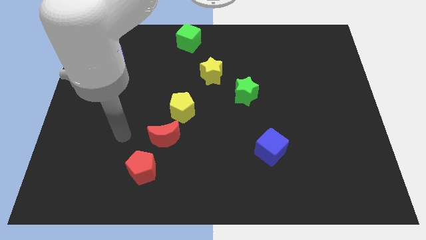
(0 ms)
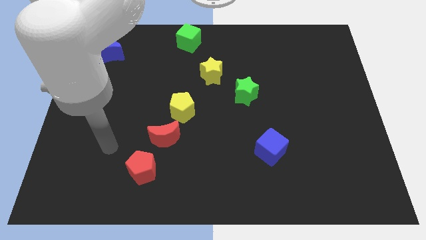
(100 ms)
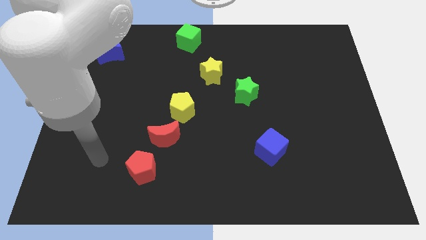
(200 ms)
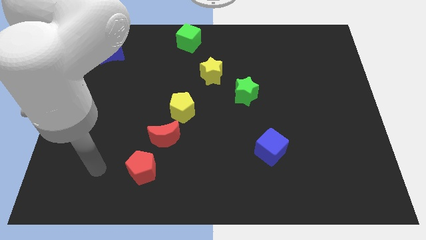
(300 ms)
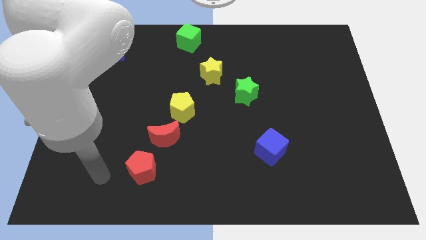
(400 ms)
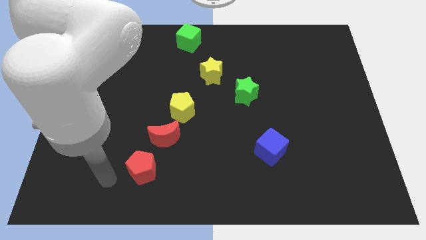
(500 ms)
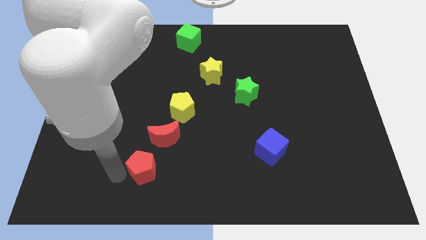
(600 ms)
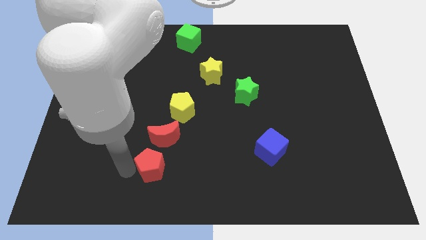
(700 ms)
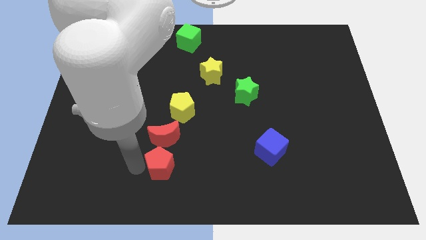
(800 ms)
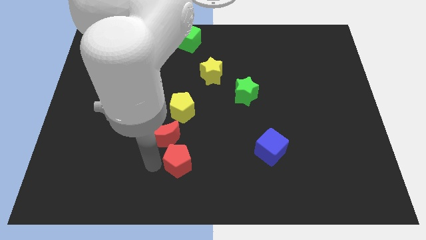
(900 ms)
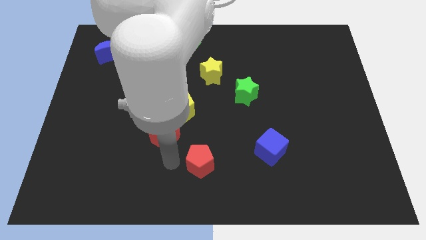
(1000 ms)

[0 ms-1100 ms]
move red pentagon to the right

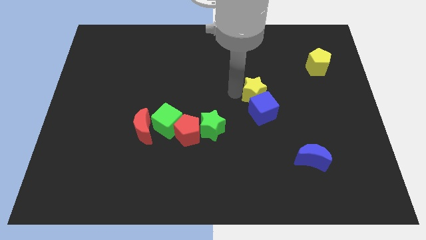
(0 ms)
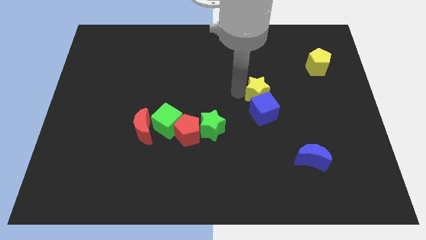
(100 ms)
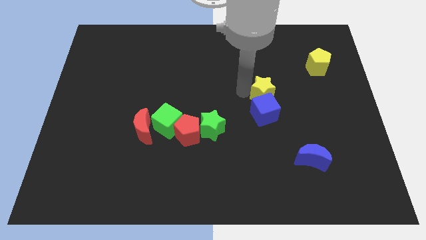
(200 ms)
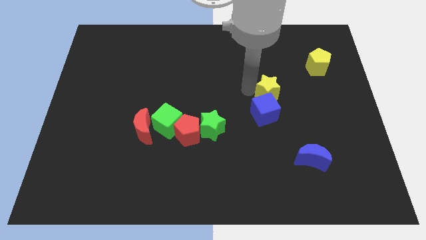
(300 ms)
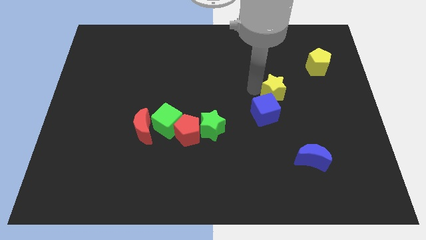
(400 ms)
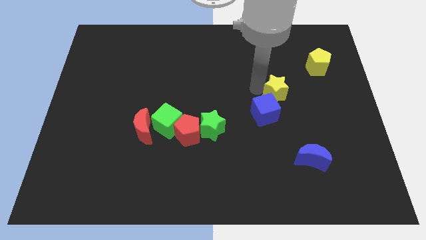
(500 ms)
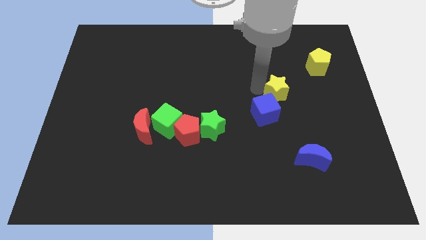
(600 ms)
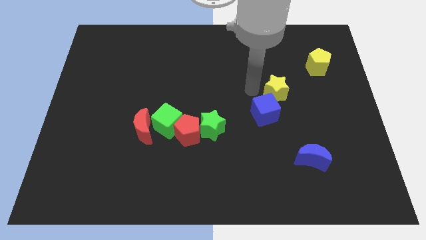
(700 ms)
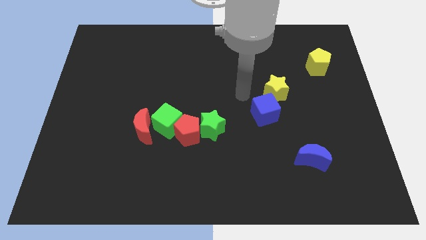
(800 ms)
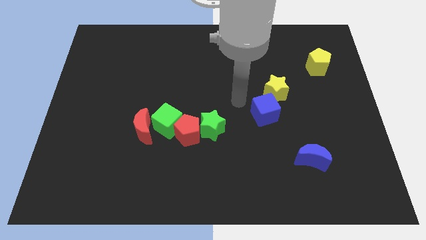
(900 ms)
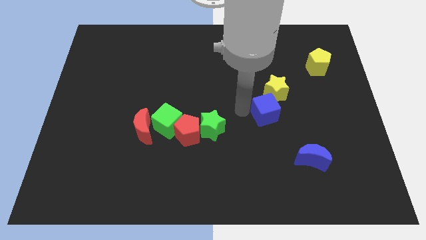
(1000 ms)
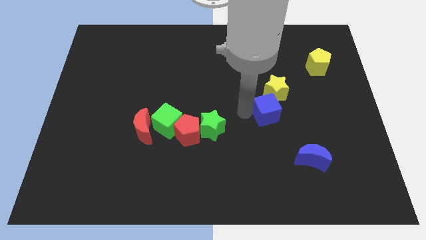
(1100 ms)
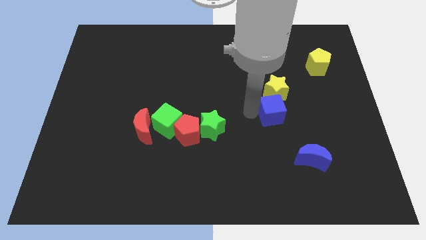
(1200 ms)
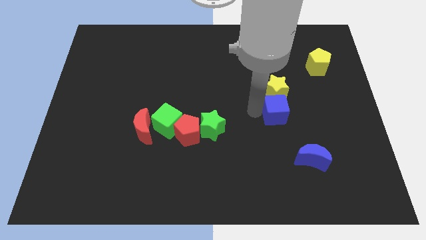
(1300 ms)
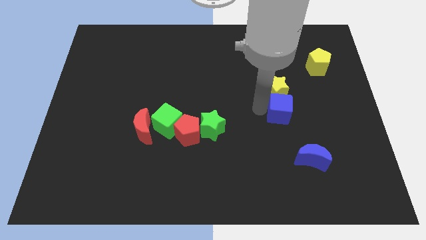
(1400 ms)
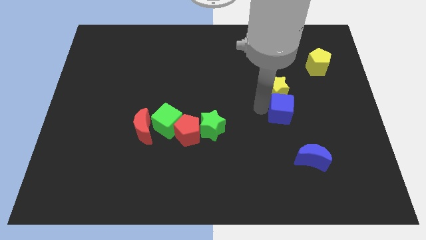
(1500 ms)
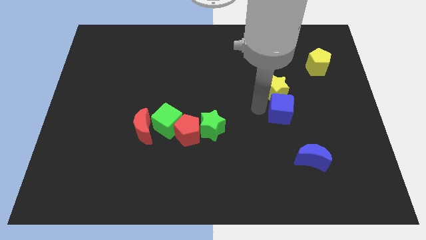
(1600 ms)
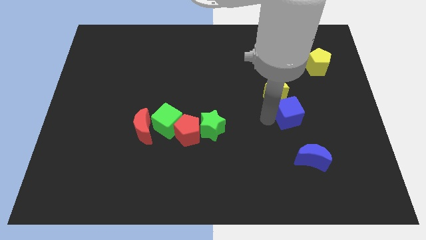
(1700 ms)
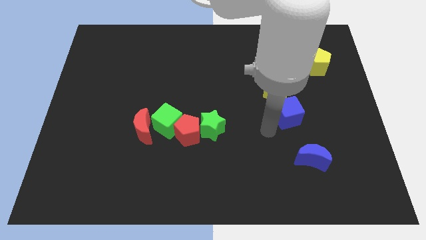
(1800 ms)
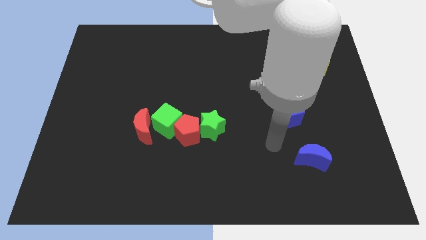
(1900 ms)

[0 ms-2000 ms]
push the blue cube and yellow star to right slightly

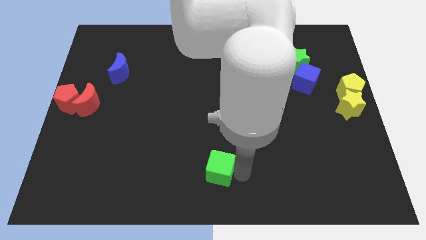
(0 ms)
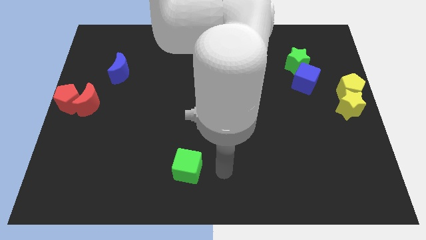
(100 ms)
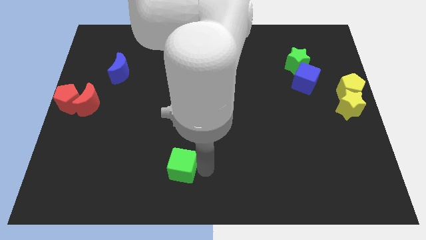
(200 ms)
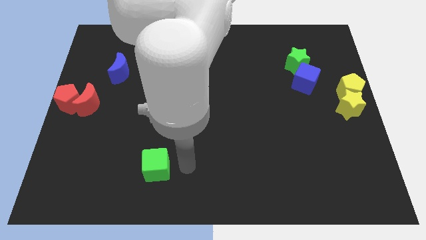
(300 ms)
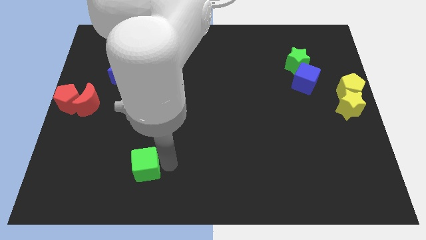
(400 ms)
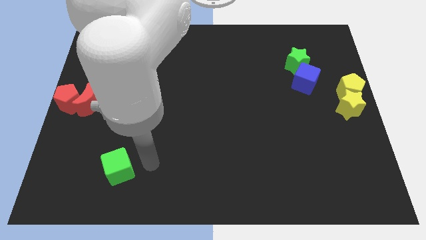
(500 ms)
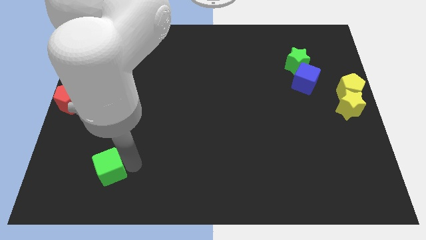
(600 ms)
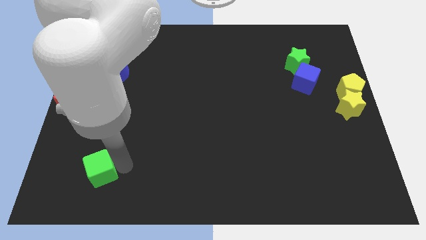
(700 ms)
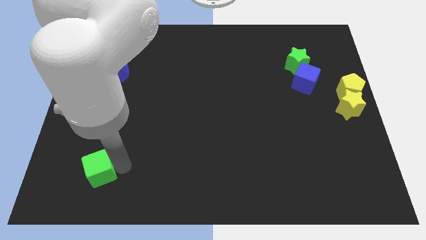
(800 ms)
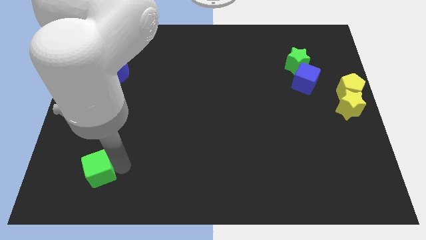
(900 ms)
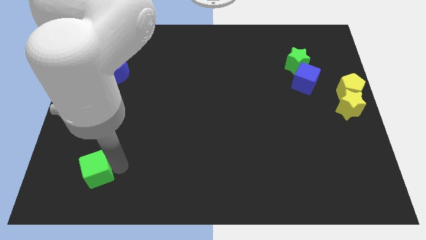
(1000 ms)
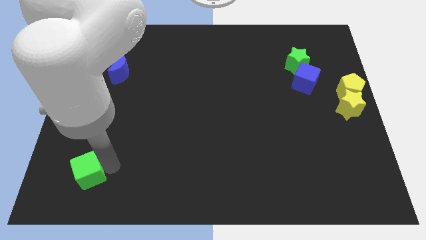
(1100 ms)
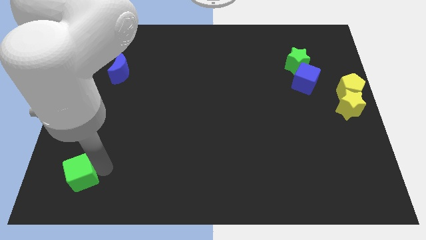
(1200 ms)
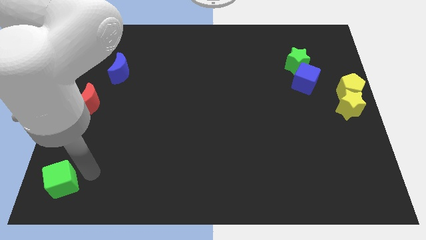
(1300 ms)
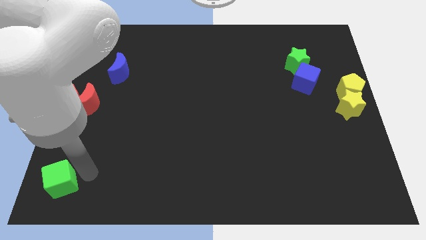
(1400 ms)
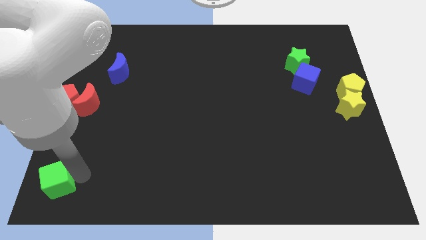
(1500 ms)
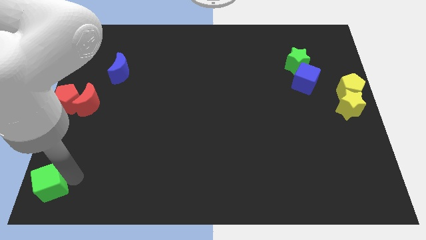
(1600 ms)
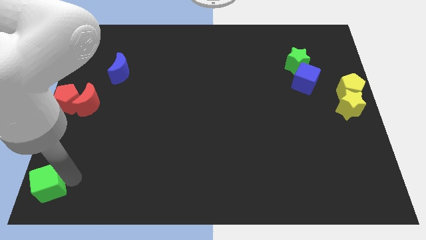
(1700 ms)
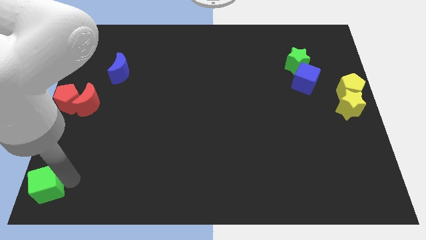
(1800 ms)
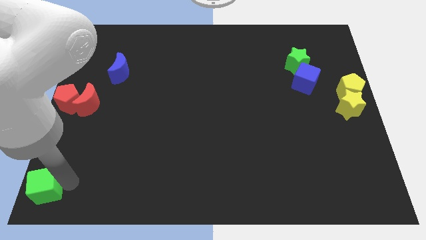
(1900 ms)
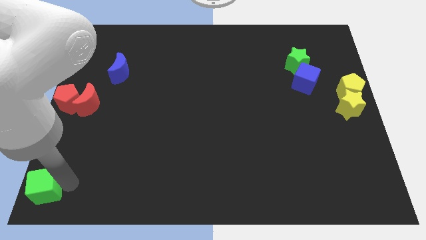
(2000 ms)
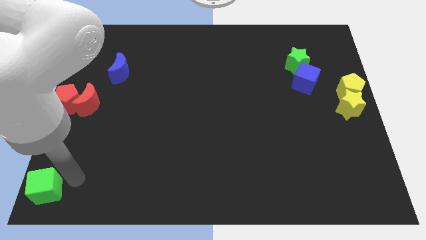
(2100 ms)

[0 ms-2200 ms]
push the green cube towards the bottom left corner of the board

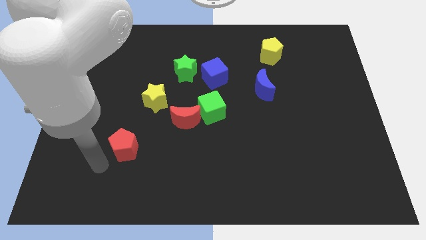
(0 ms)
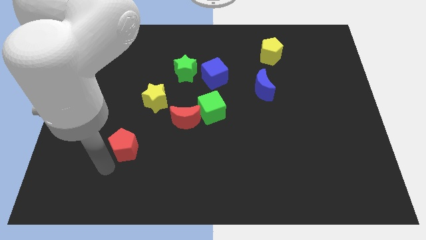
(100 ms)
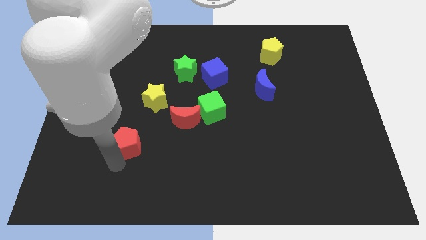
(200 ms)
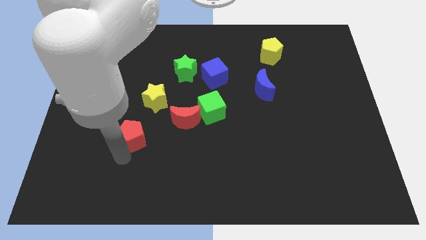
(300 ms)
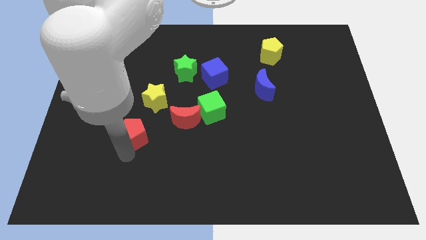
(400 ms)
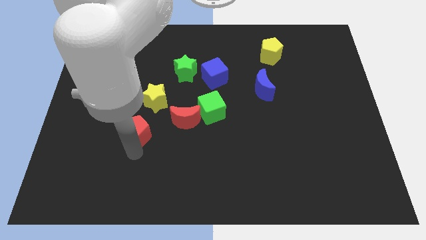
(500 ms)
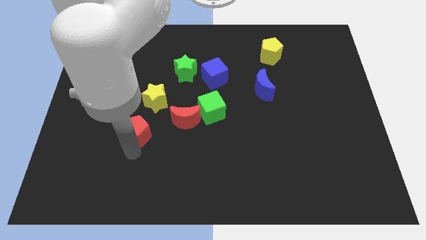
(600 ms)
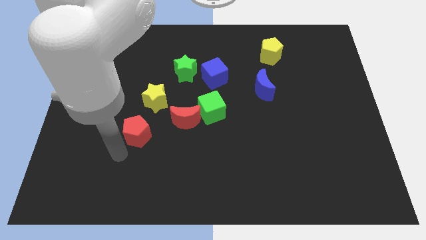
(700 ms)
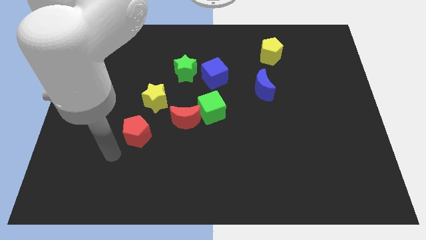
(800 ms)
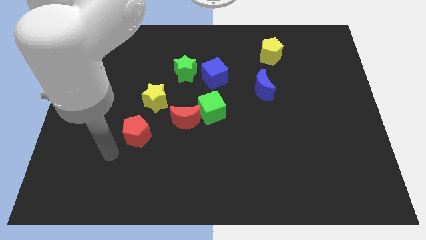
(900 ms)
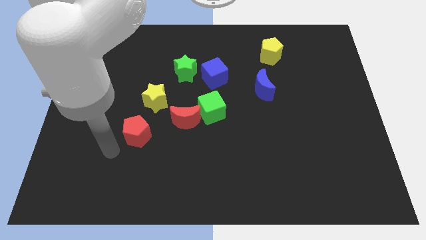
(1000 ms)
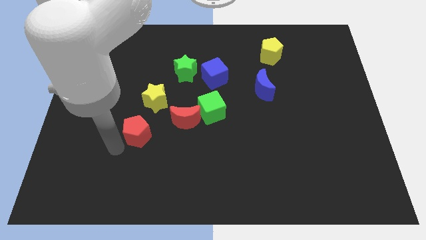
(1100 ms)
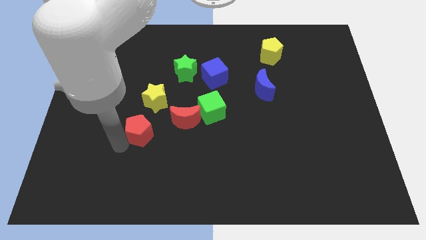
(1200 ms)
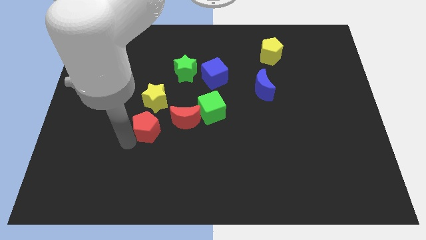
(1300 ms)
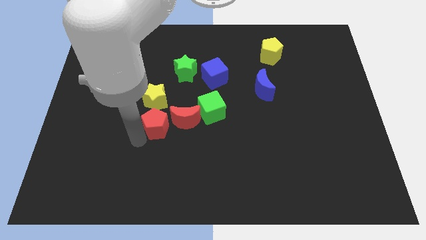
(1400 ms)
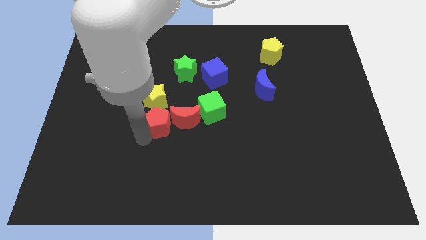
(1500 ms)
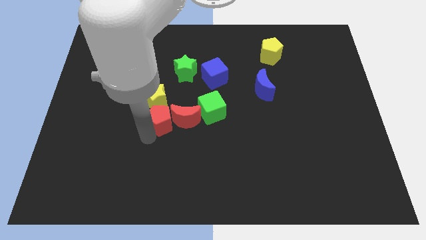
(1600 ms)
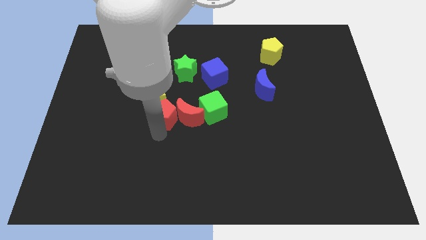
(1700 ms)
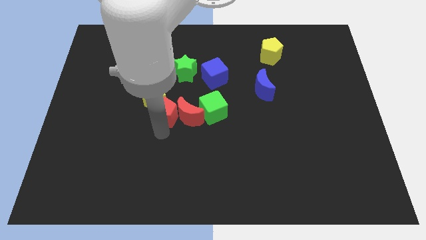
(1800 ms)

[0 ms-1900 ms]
push the red pentagon in to the red moon

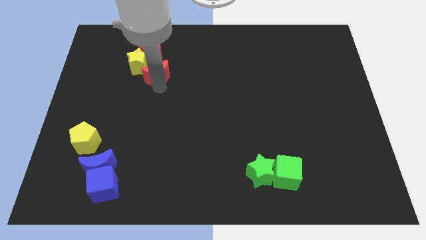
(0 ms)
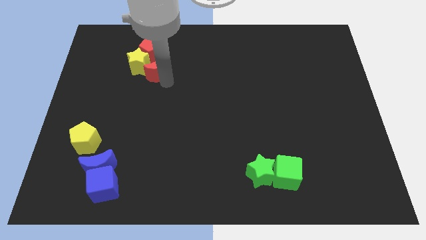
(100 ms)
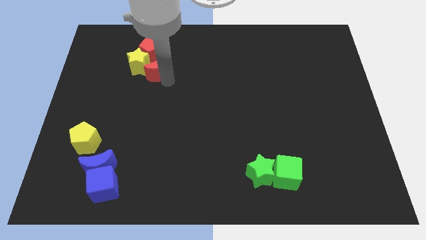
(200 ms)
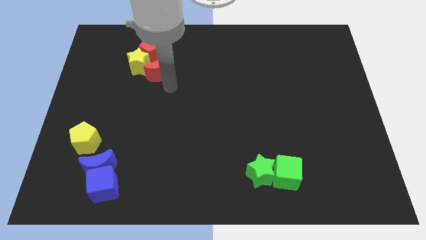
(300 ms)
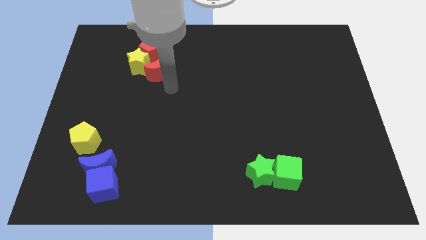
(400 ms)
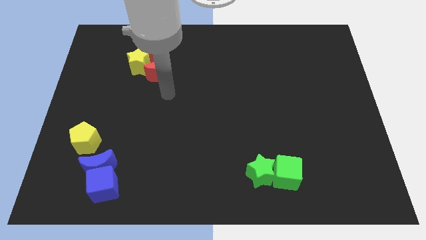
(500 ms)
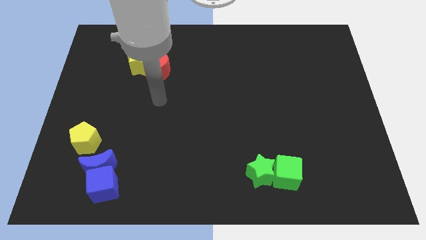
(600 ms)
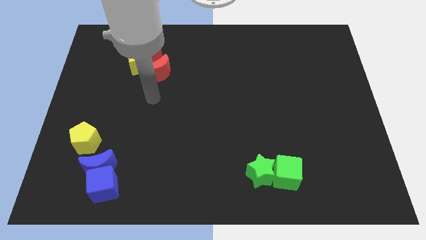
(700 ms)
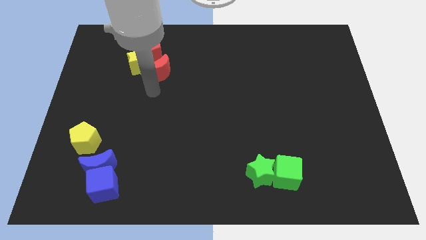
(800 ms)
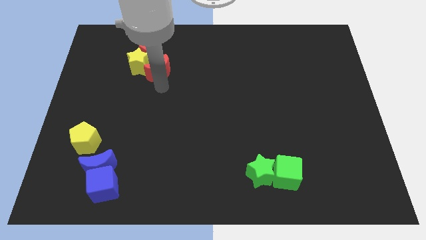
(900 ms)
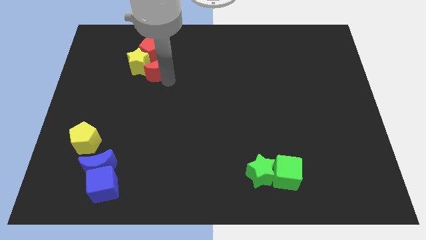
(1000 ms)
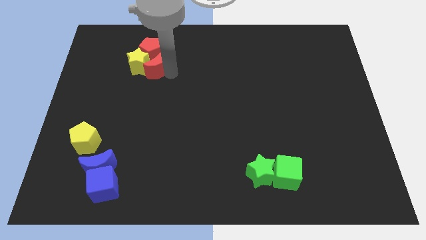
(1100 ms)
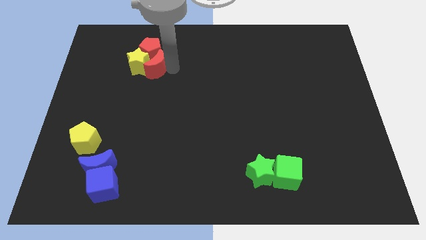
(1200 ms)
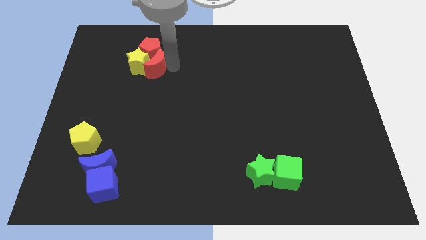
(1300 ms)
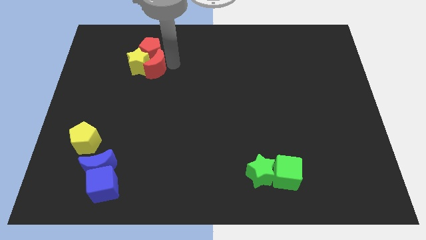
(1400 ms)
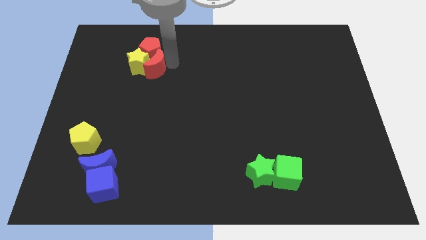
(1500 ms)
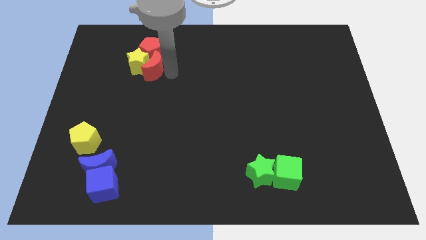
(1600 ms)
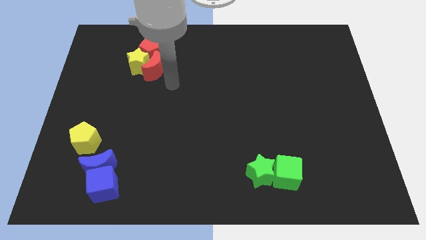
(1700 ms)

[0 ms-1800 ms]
move the red crescent towards the yellow star
